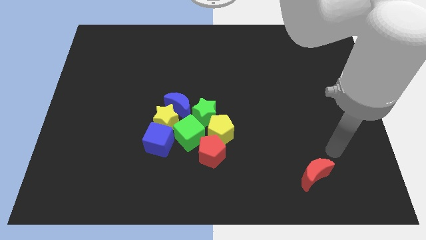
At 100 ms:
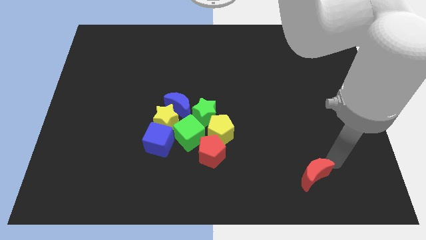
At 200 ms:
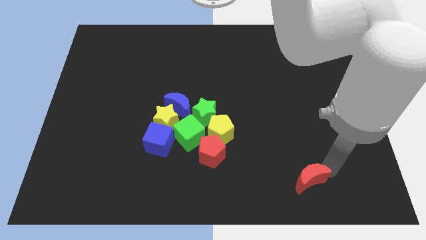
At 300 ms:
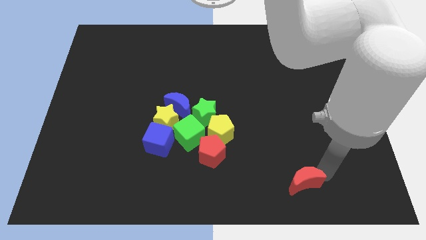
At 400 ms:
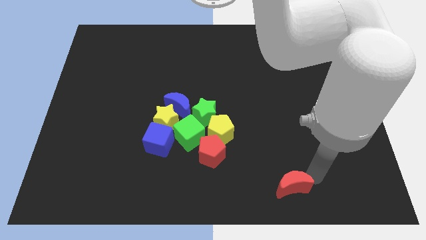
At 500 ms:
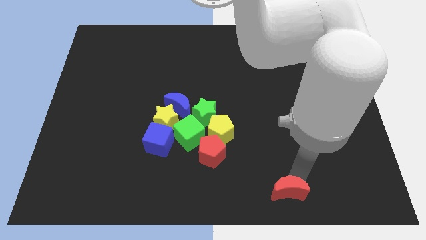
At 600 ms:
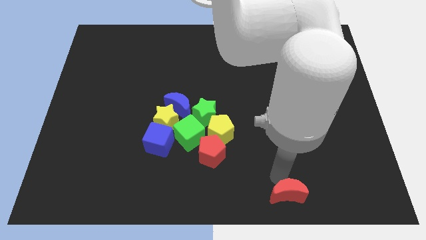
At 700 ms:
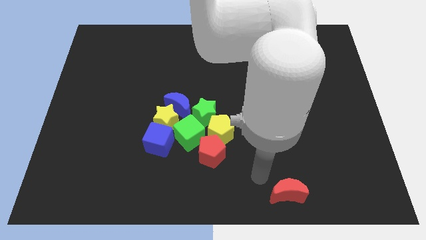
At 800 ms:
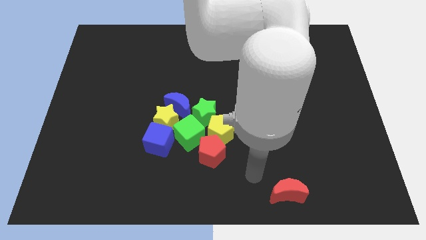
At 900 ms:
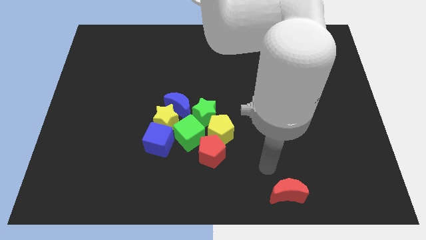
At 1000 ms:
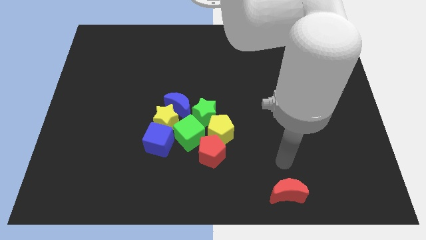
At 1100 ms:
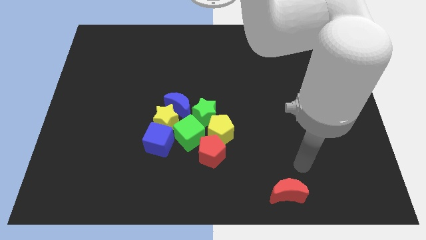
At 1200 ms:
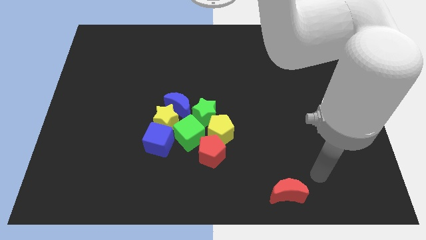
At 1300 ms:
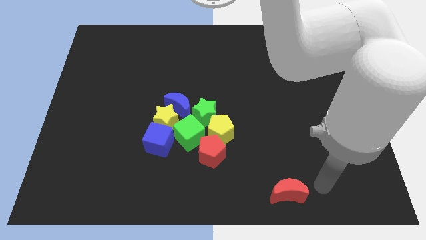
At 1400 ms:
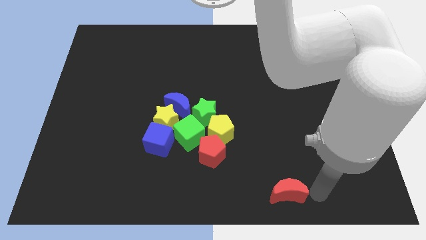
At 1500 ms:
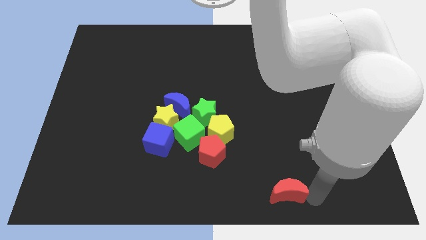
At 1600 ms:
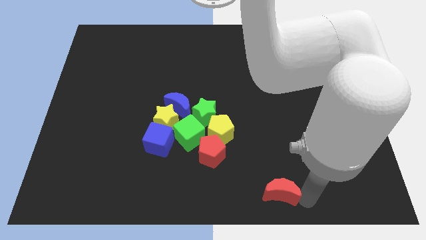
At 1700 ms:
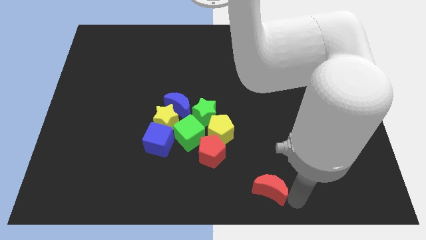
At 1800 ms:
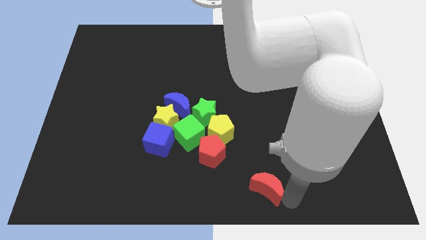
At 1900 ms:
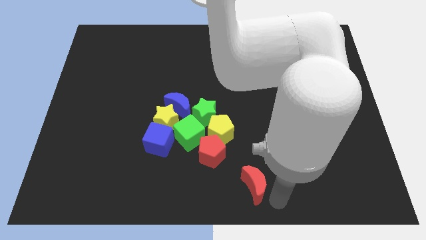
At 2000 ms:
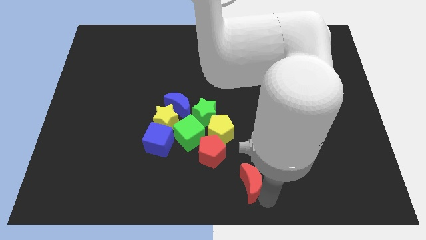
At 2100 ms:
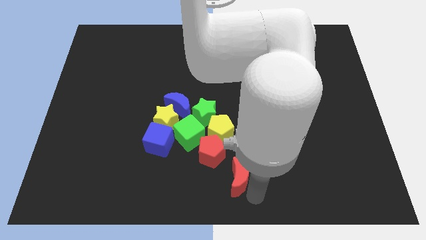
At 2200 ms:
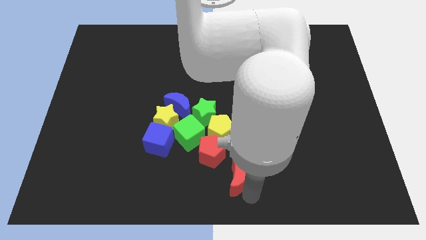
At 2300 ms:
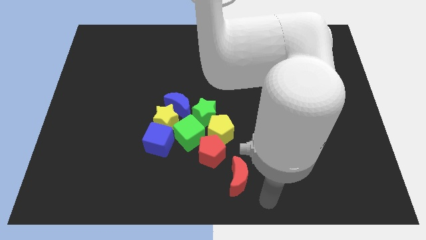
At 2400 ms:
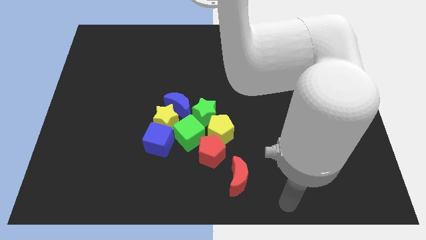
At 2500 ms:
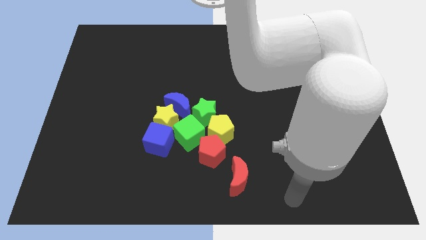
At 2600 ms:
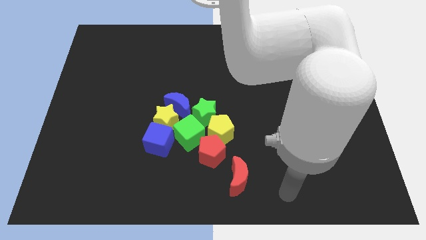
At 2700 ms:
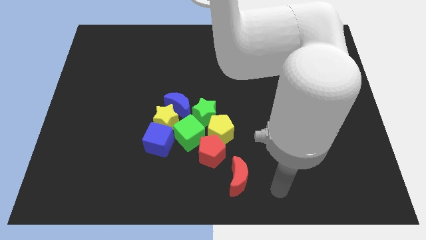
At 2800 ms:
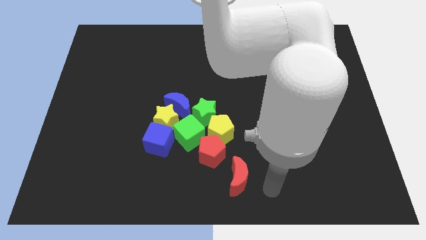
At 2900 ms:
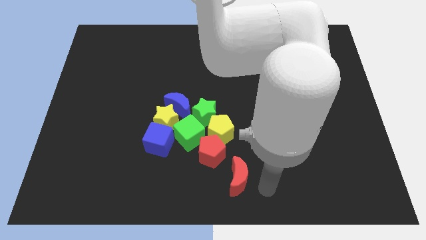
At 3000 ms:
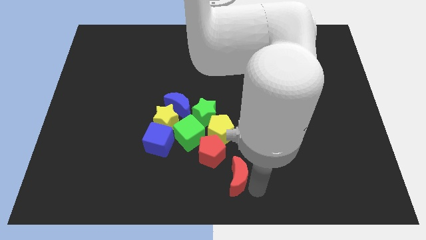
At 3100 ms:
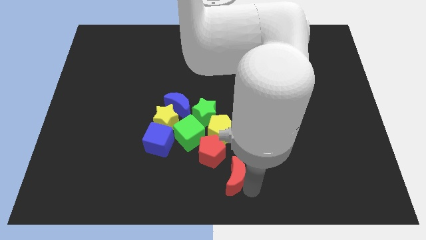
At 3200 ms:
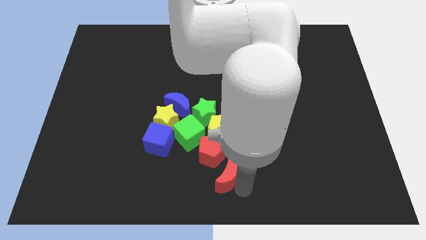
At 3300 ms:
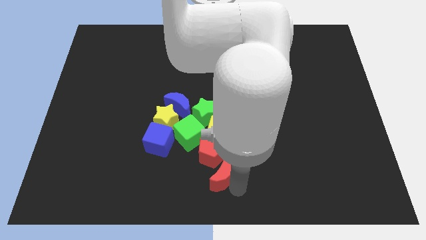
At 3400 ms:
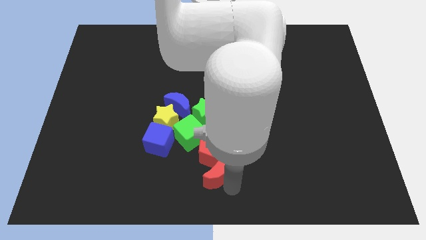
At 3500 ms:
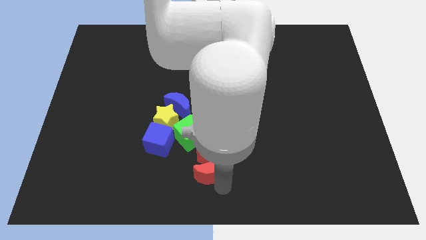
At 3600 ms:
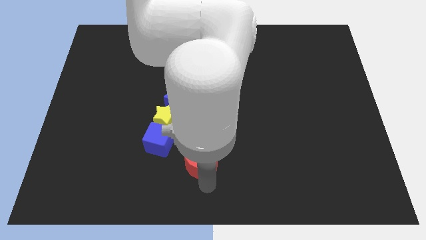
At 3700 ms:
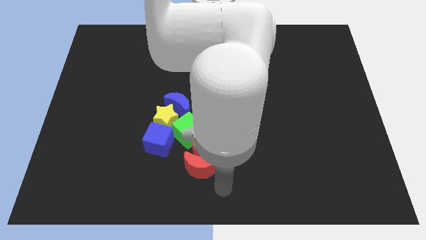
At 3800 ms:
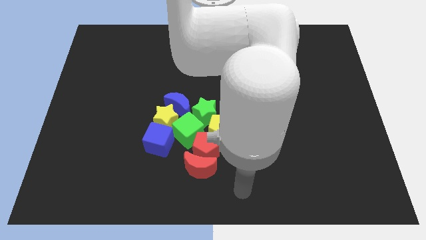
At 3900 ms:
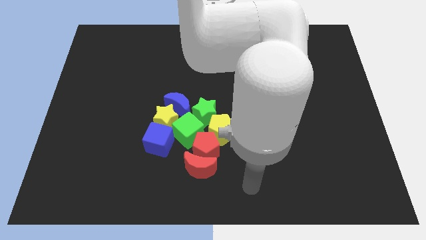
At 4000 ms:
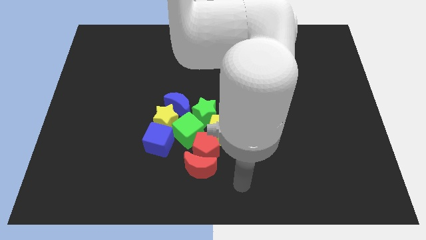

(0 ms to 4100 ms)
move the red crescent into the bottom of the red pentagon

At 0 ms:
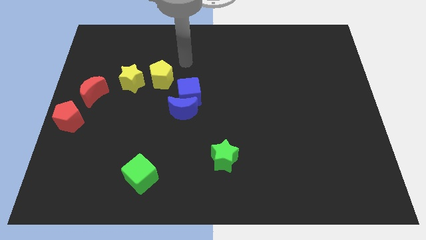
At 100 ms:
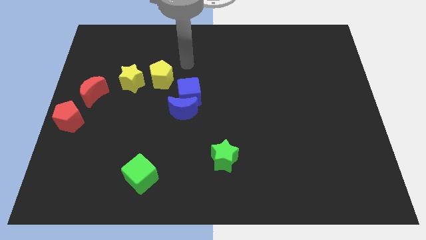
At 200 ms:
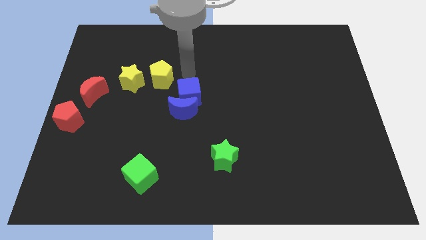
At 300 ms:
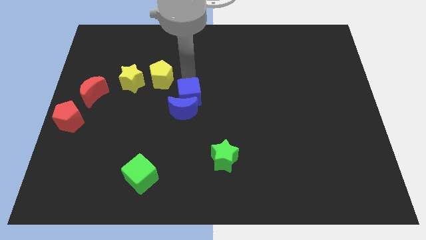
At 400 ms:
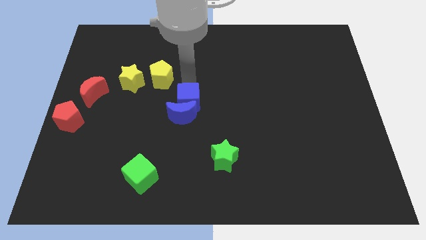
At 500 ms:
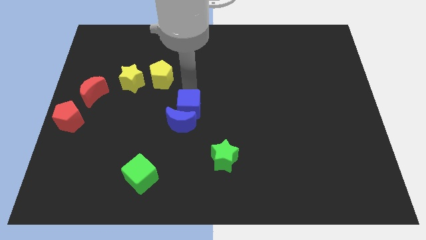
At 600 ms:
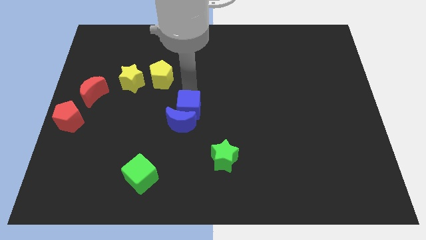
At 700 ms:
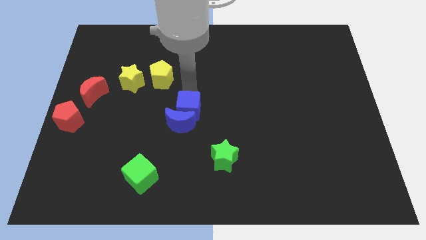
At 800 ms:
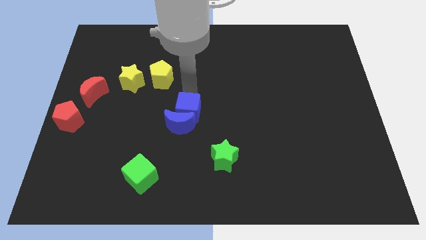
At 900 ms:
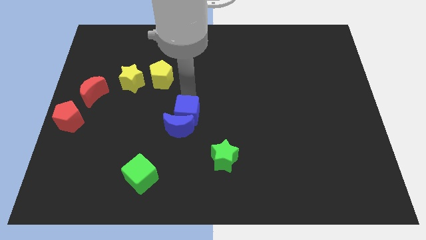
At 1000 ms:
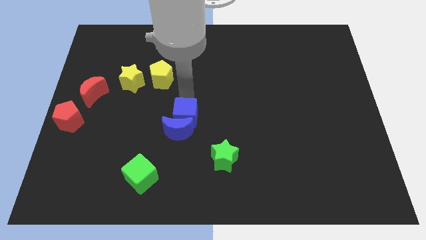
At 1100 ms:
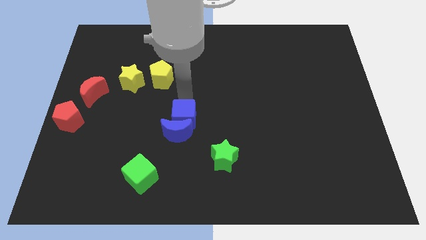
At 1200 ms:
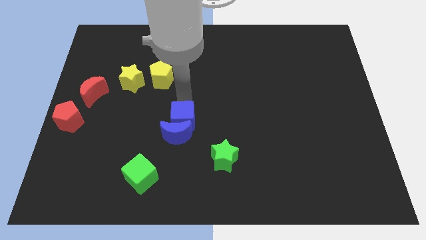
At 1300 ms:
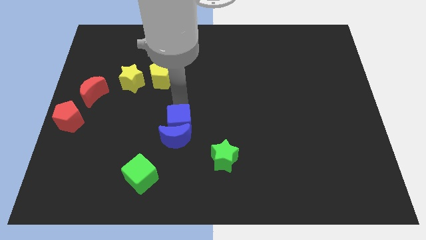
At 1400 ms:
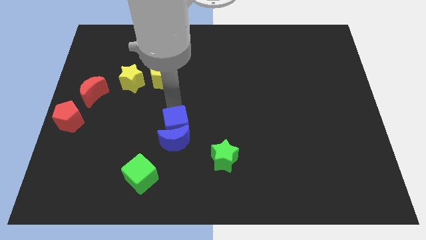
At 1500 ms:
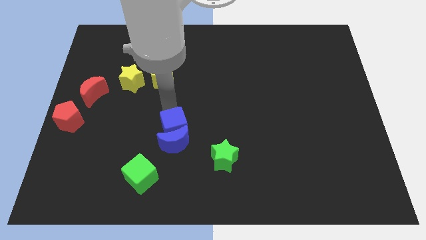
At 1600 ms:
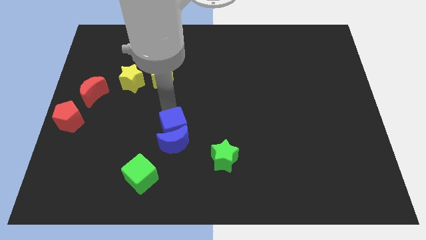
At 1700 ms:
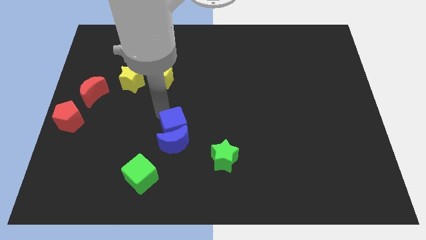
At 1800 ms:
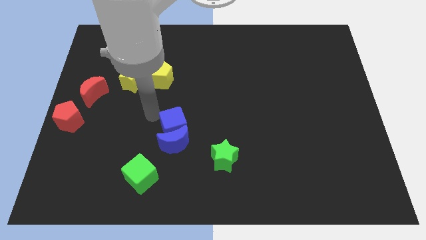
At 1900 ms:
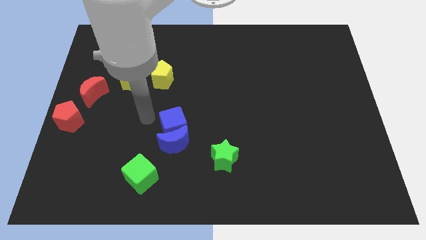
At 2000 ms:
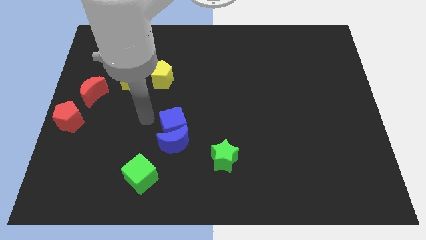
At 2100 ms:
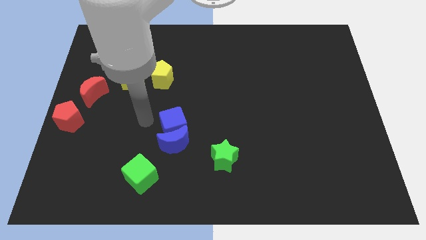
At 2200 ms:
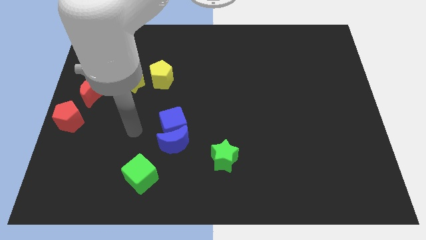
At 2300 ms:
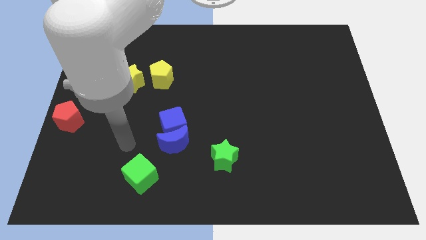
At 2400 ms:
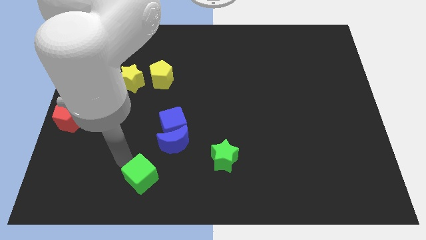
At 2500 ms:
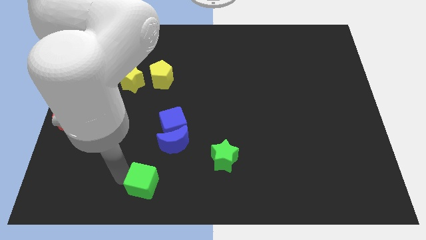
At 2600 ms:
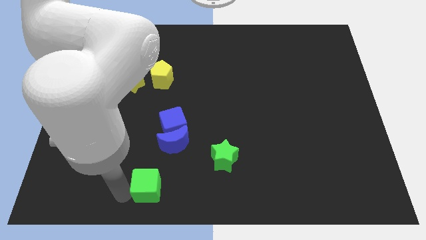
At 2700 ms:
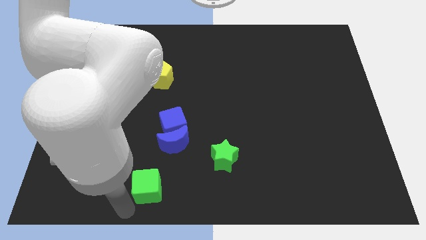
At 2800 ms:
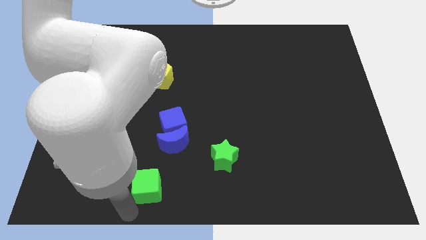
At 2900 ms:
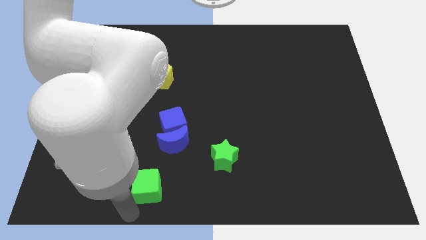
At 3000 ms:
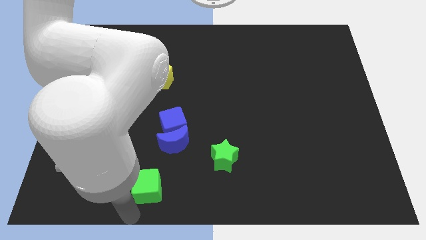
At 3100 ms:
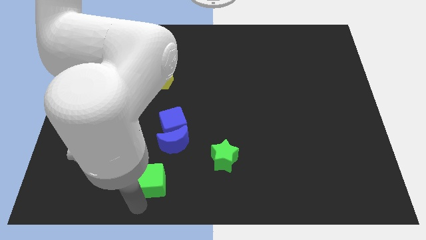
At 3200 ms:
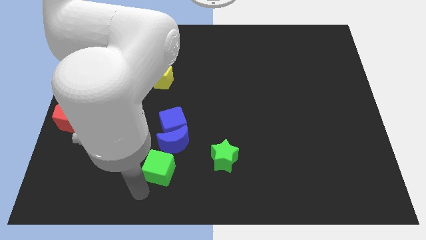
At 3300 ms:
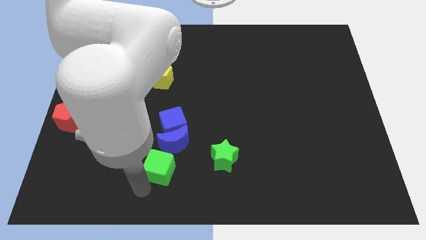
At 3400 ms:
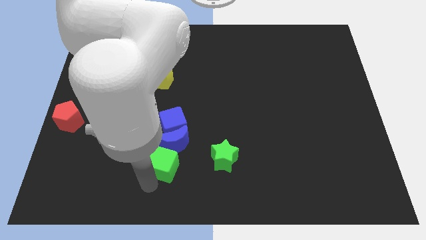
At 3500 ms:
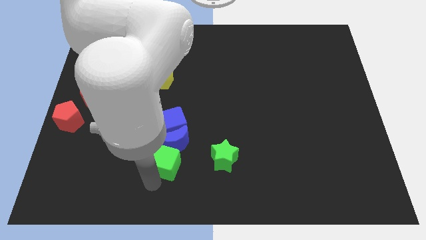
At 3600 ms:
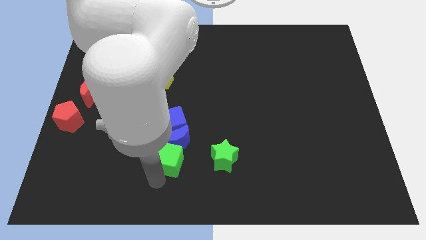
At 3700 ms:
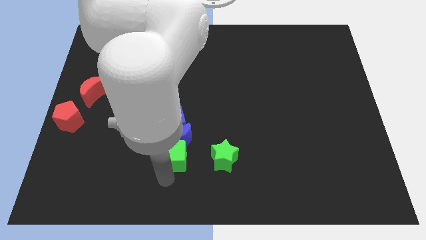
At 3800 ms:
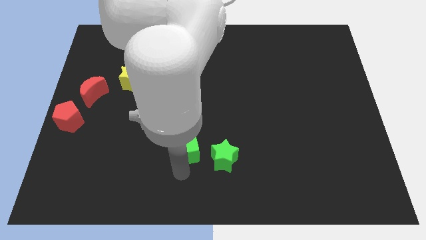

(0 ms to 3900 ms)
slide the green cube into the blue blocks

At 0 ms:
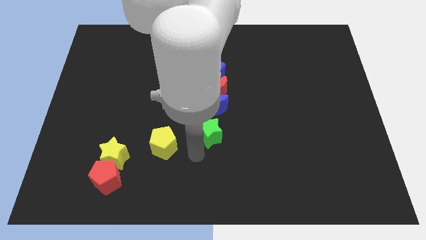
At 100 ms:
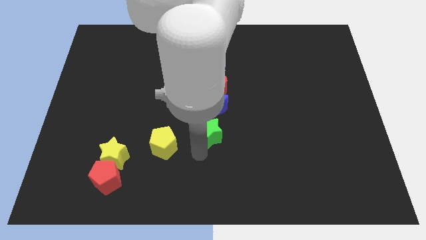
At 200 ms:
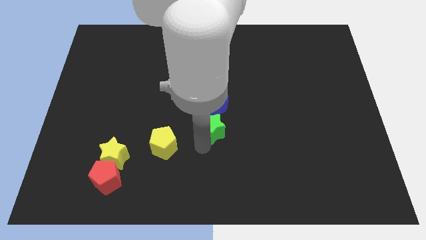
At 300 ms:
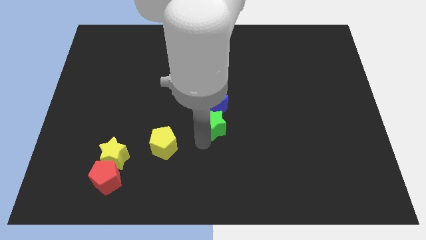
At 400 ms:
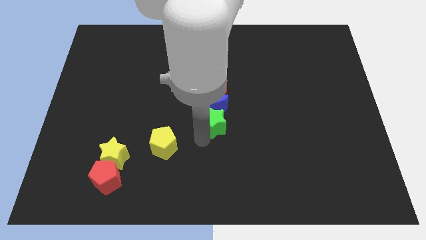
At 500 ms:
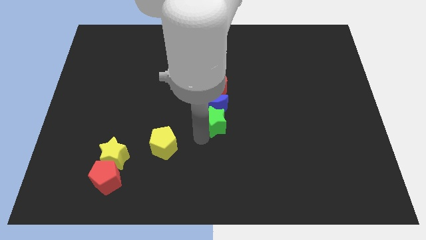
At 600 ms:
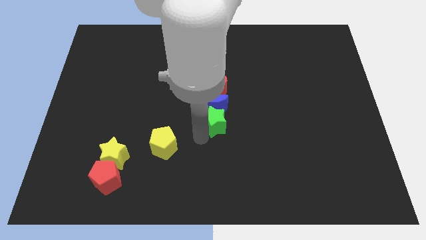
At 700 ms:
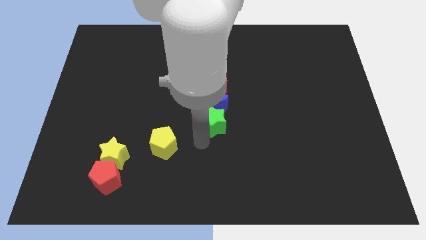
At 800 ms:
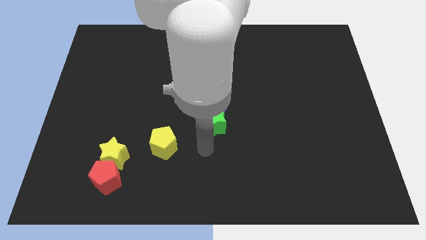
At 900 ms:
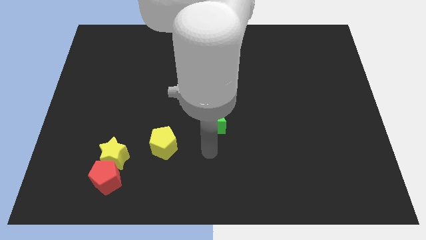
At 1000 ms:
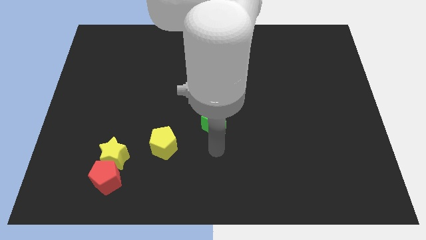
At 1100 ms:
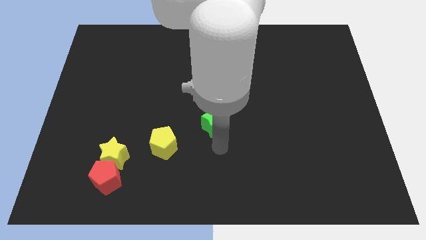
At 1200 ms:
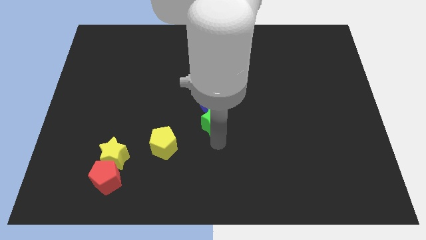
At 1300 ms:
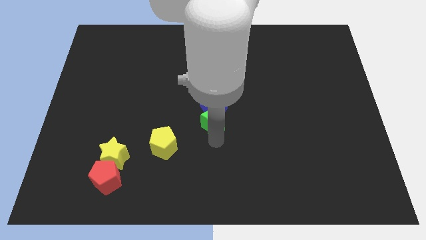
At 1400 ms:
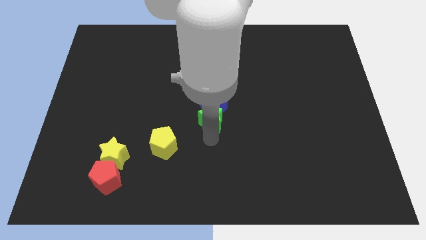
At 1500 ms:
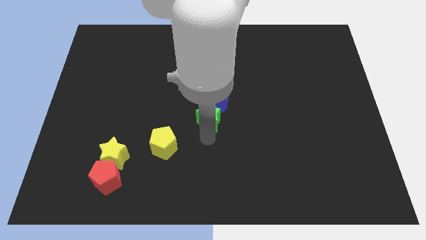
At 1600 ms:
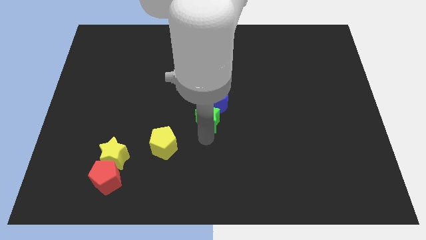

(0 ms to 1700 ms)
push the green star into blue crescent
